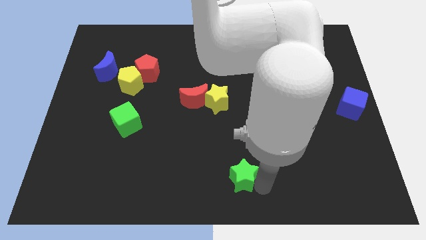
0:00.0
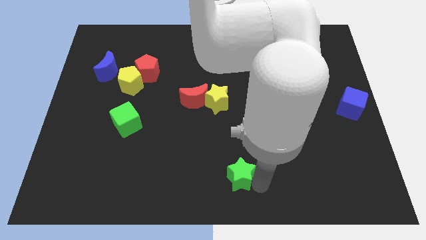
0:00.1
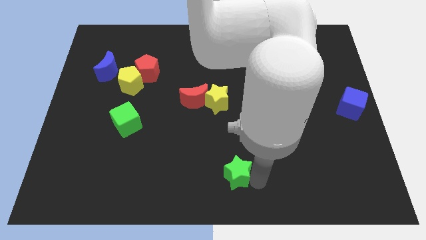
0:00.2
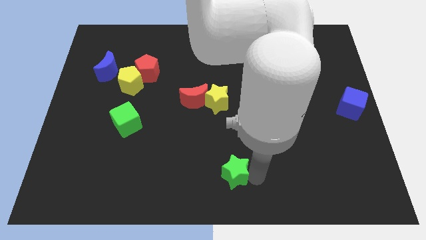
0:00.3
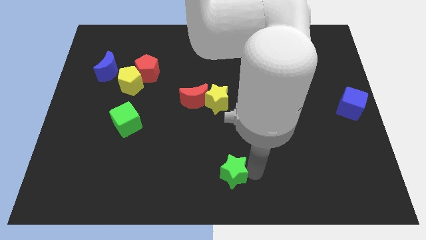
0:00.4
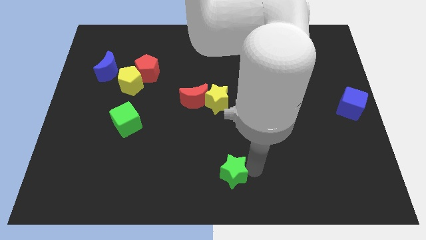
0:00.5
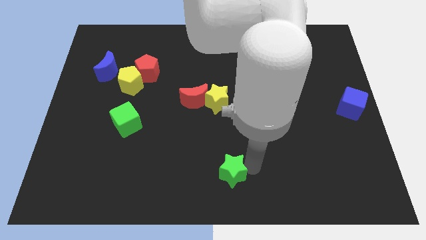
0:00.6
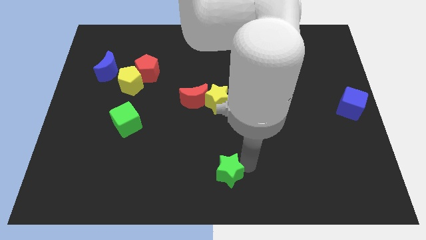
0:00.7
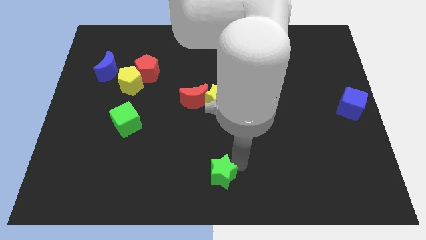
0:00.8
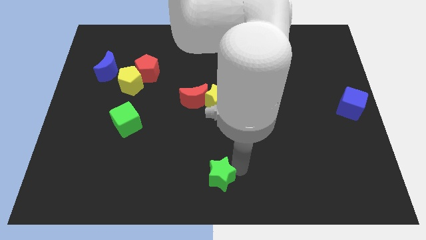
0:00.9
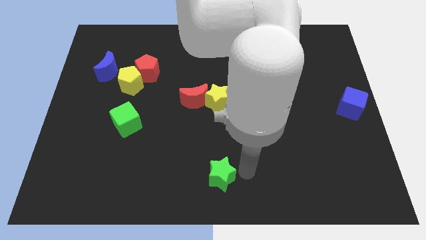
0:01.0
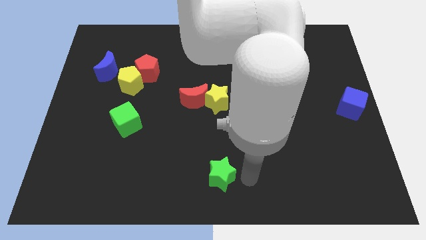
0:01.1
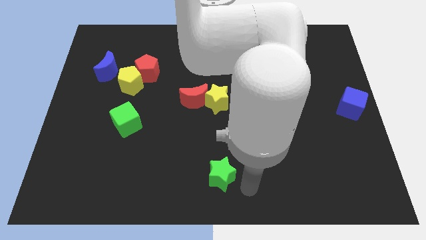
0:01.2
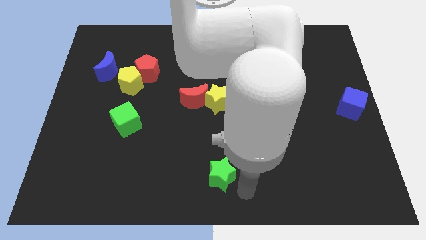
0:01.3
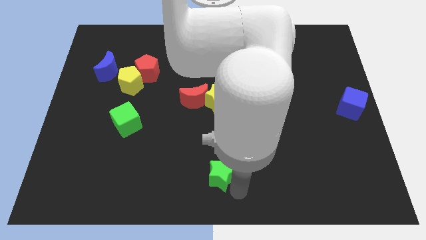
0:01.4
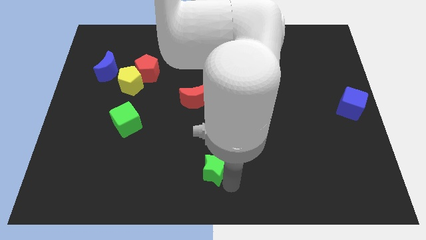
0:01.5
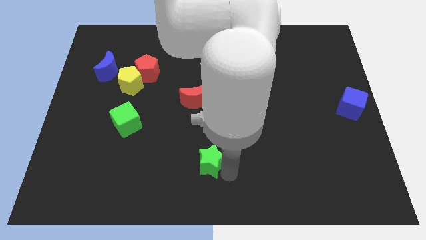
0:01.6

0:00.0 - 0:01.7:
push the green star to the left

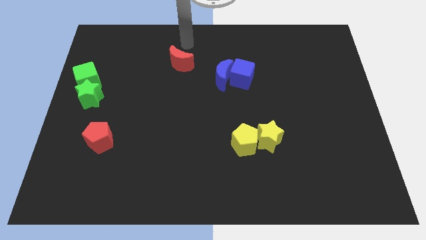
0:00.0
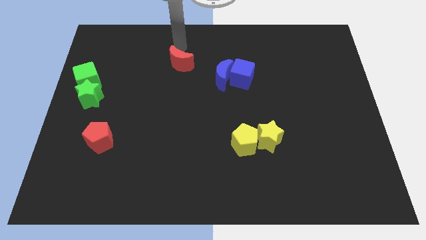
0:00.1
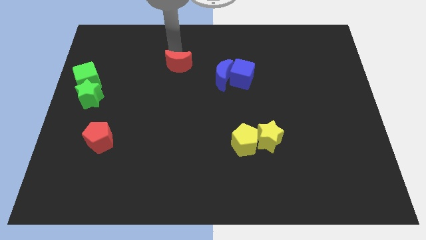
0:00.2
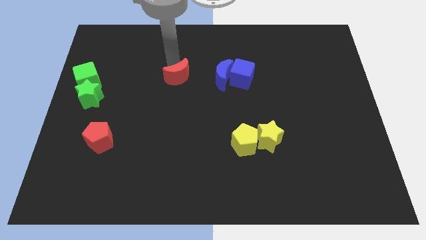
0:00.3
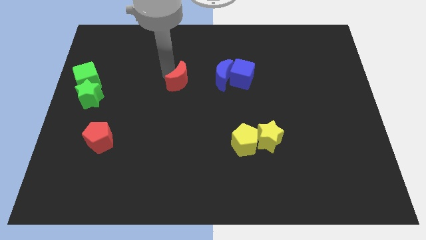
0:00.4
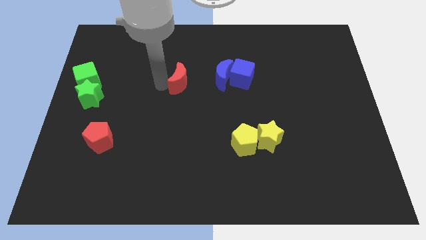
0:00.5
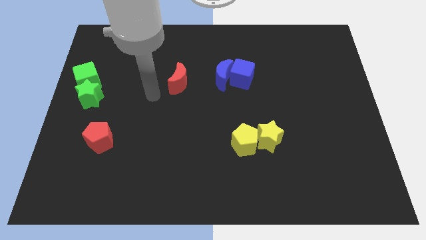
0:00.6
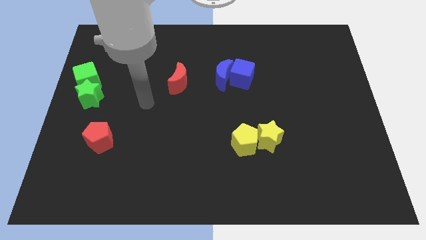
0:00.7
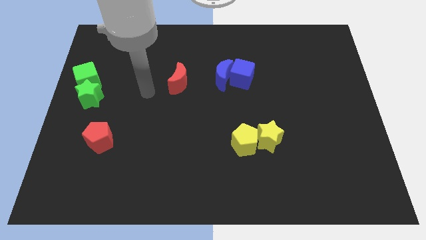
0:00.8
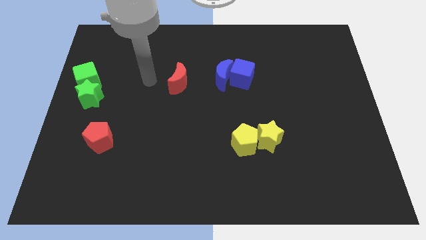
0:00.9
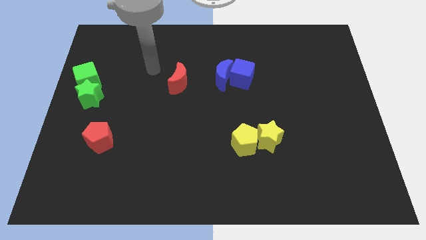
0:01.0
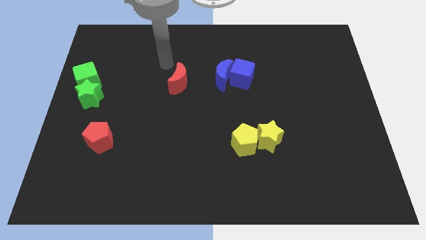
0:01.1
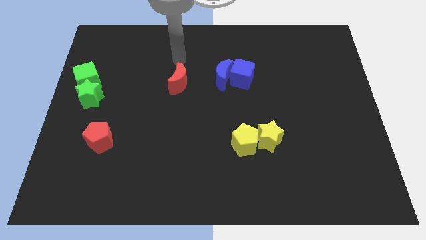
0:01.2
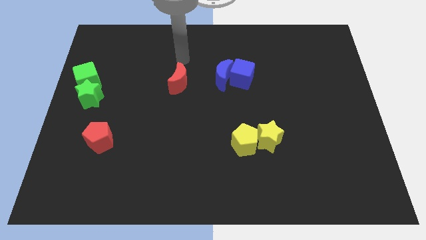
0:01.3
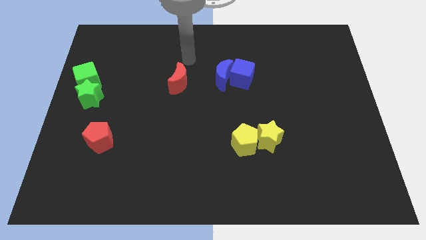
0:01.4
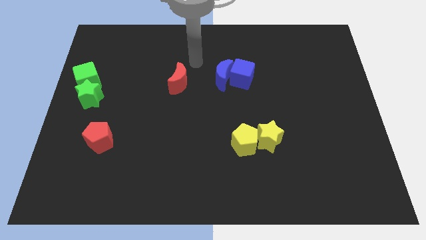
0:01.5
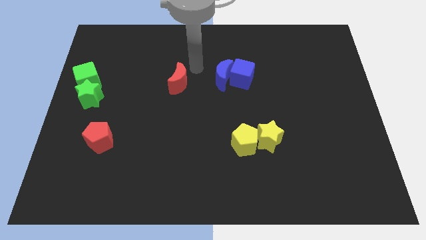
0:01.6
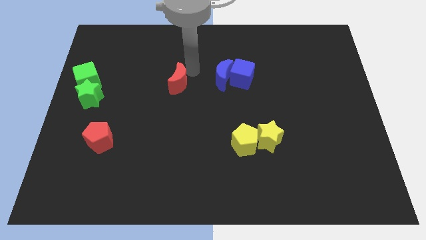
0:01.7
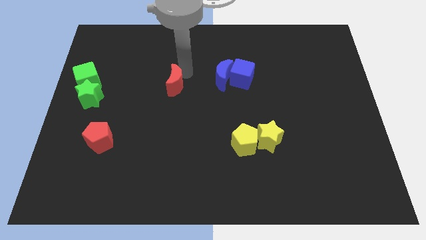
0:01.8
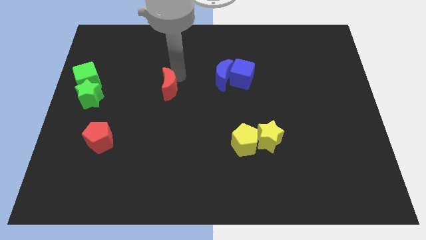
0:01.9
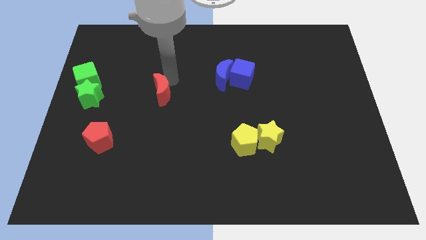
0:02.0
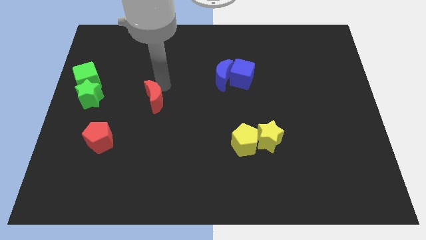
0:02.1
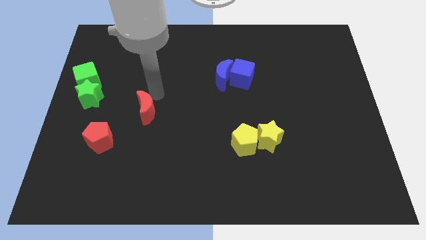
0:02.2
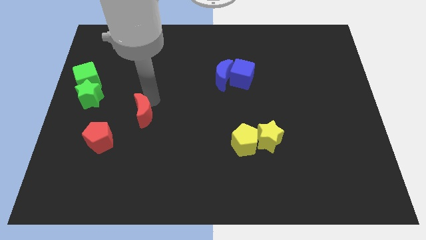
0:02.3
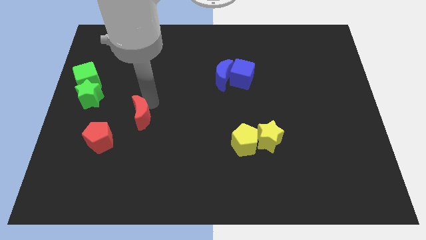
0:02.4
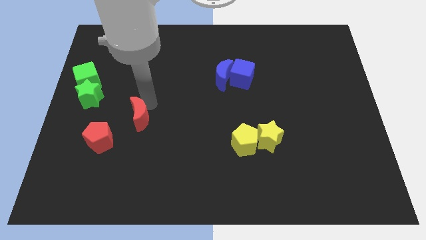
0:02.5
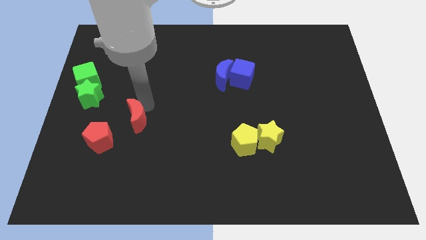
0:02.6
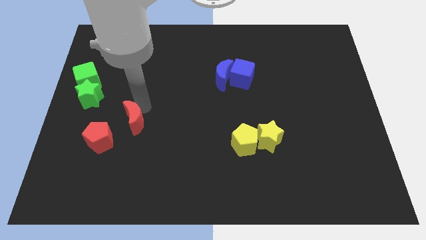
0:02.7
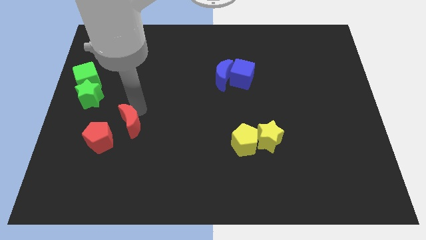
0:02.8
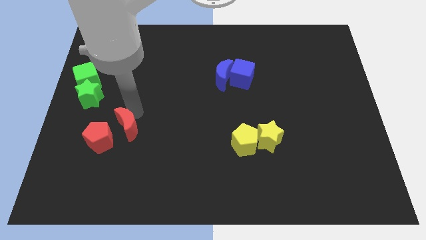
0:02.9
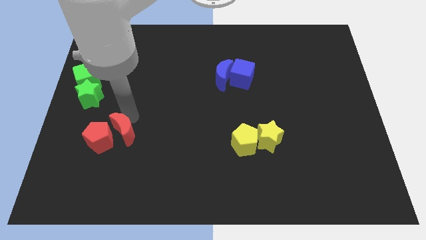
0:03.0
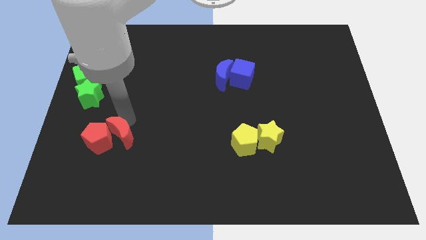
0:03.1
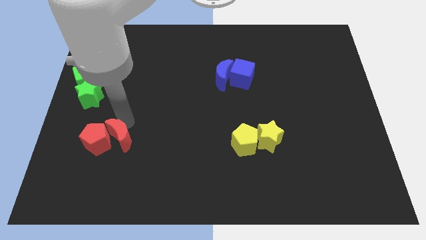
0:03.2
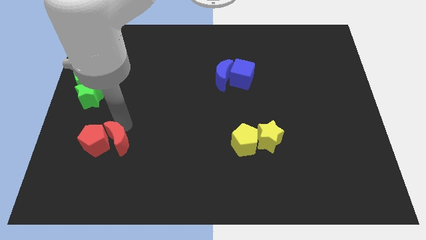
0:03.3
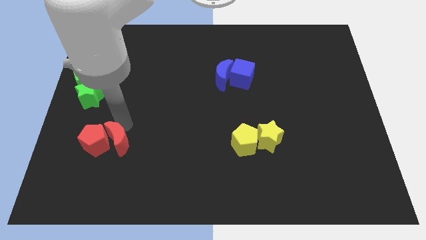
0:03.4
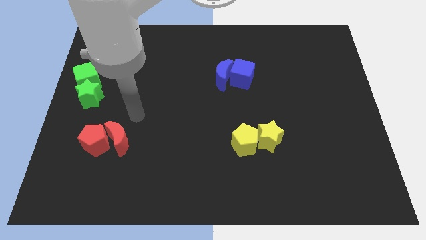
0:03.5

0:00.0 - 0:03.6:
place the red moon left to the yellow pentagon

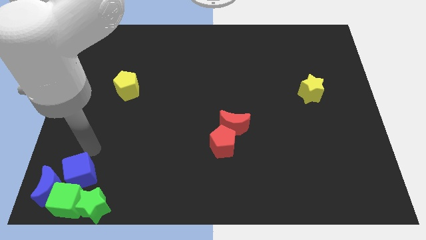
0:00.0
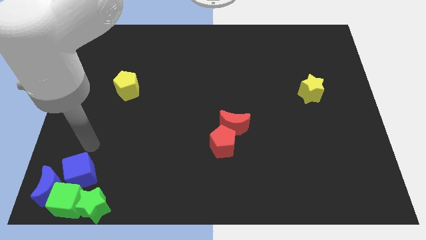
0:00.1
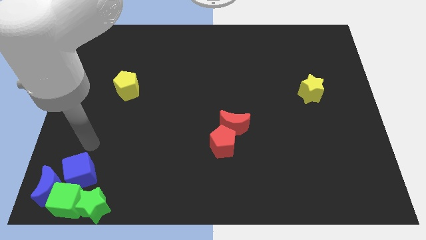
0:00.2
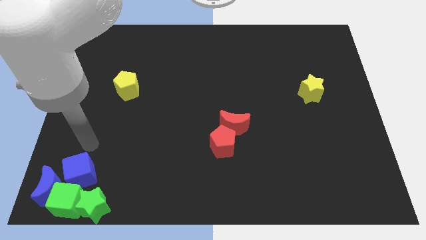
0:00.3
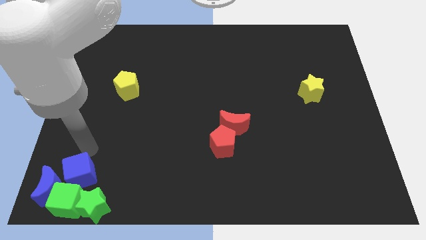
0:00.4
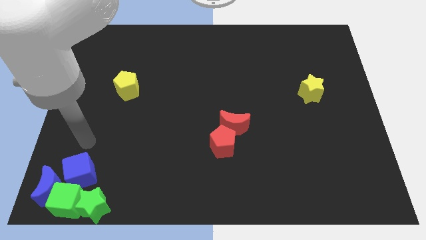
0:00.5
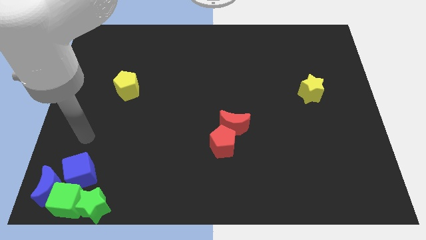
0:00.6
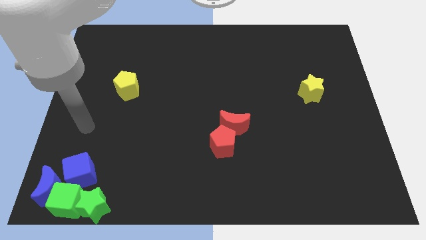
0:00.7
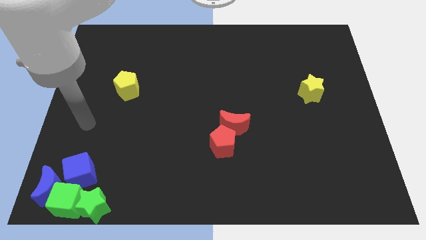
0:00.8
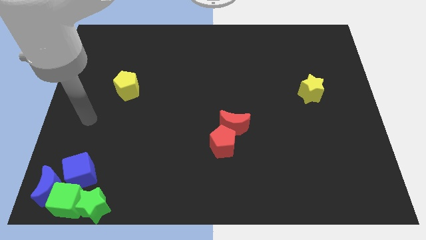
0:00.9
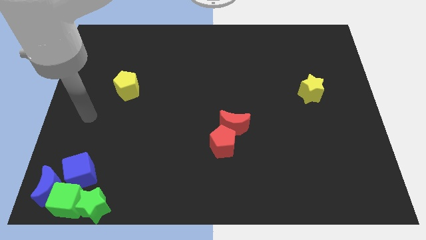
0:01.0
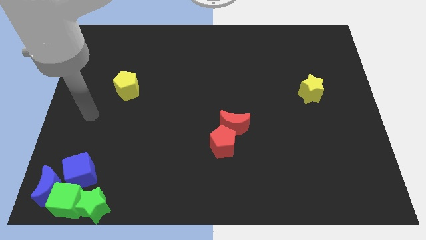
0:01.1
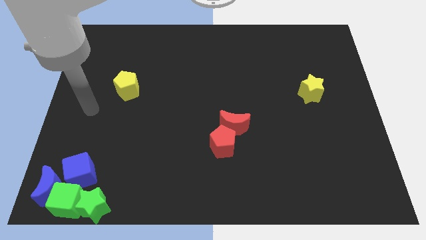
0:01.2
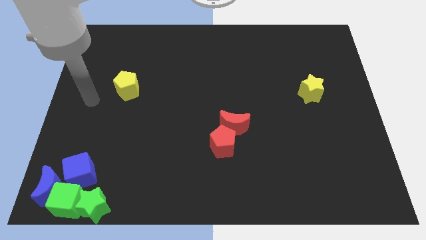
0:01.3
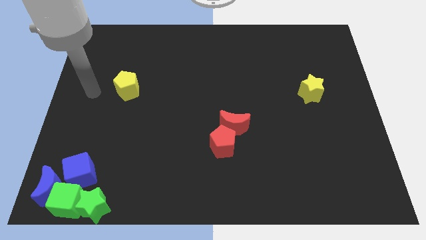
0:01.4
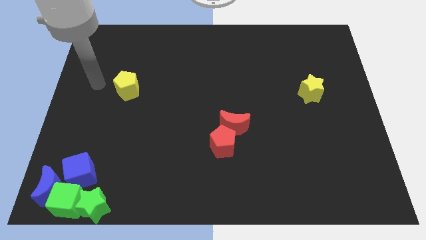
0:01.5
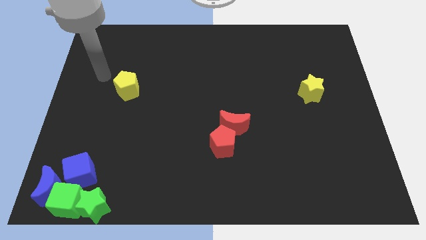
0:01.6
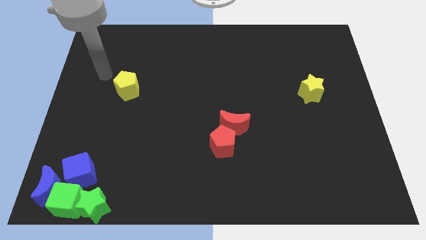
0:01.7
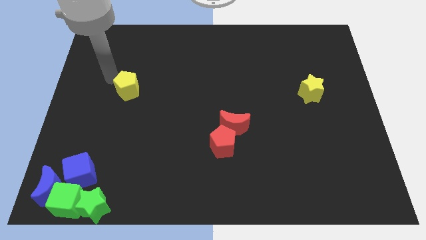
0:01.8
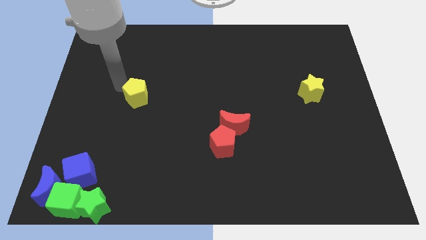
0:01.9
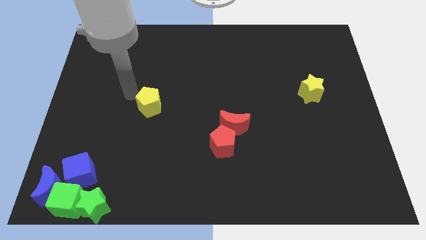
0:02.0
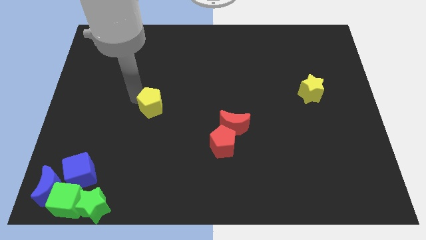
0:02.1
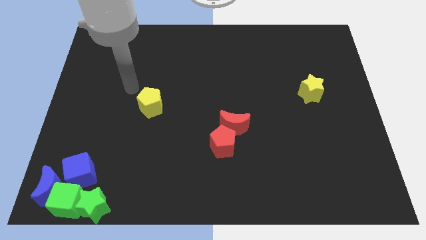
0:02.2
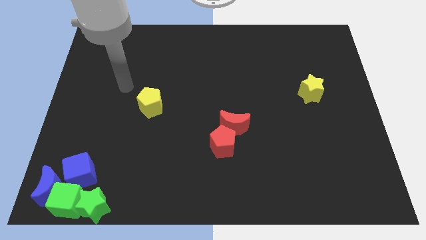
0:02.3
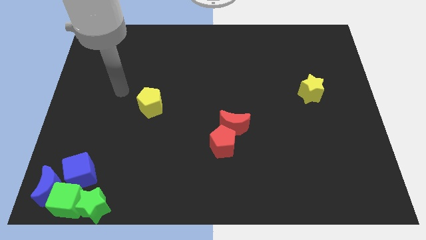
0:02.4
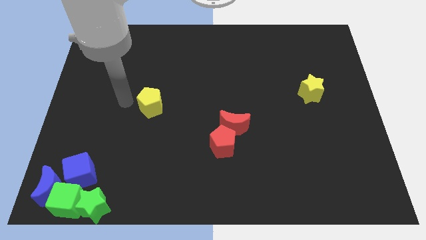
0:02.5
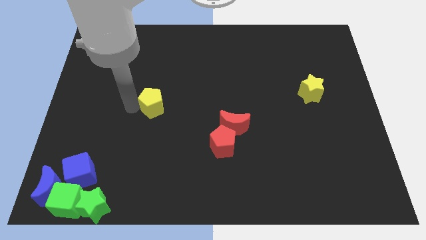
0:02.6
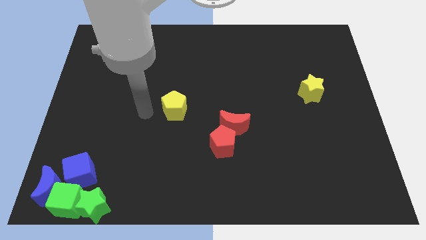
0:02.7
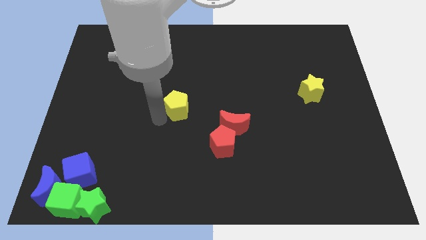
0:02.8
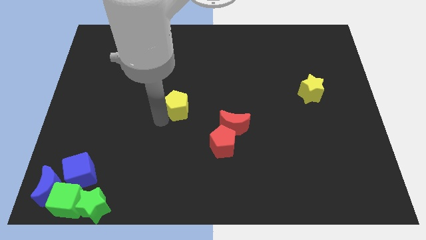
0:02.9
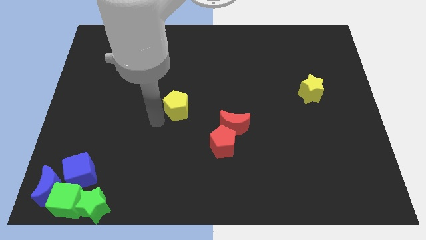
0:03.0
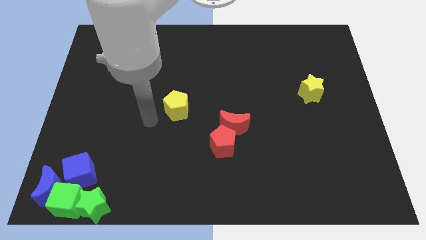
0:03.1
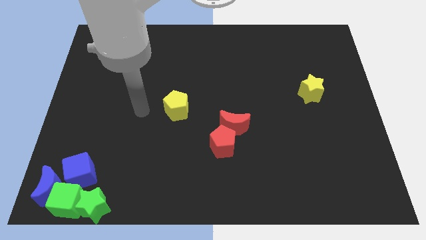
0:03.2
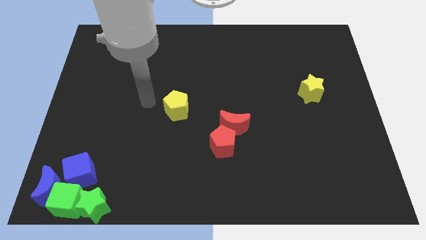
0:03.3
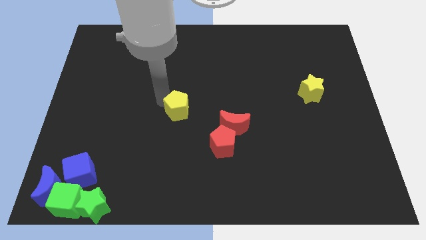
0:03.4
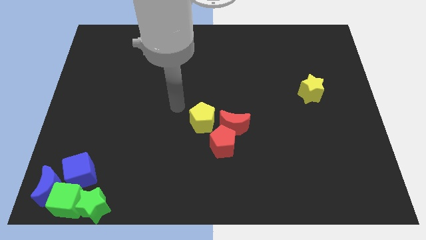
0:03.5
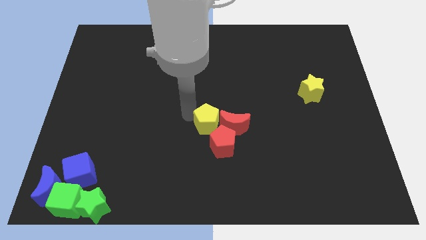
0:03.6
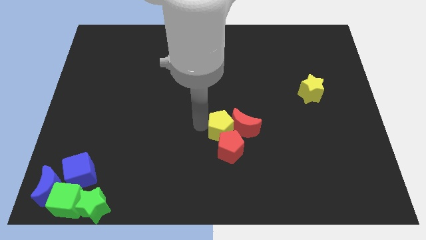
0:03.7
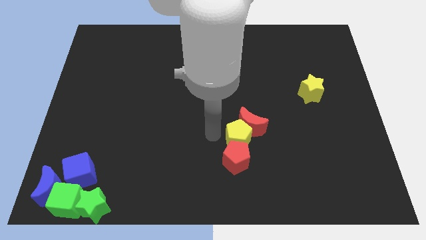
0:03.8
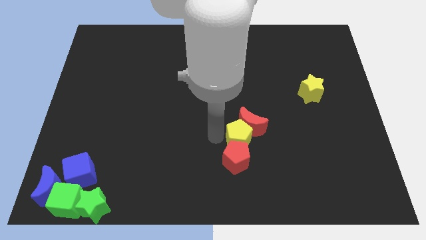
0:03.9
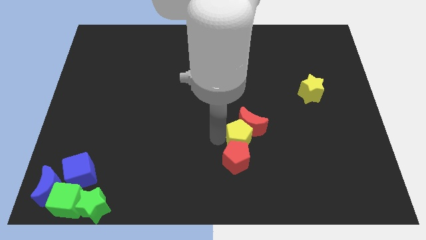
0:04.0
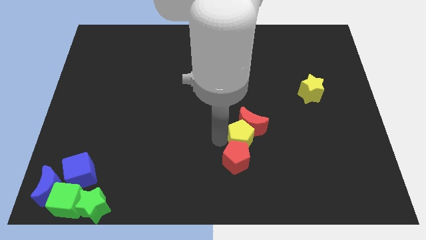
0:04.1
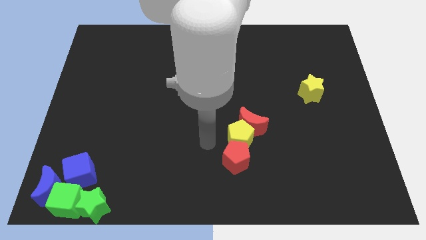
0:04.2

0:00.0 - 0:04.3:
move your arm away from the blue cube
